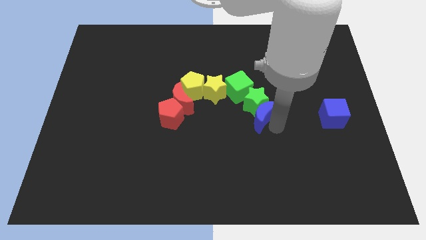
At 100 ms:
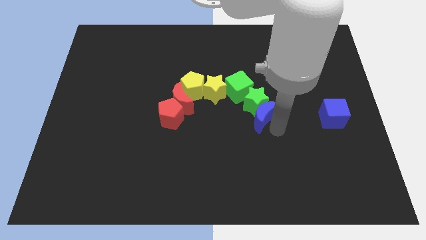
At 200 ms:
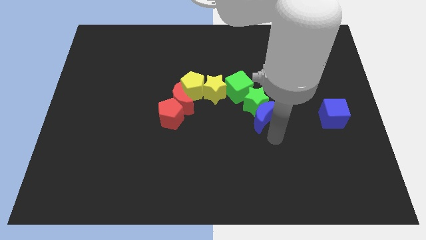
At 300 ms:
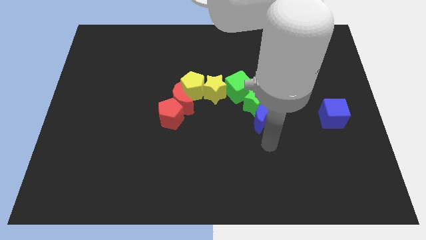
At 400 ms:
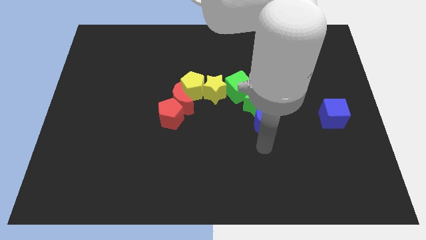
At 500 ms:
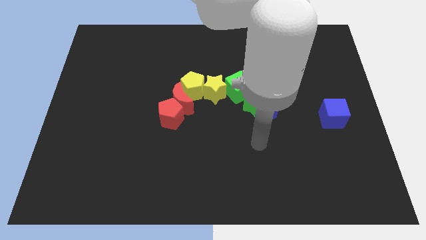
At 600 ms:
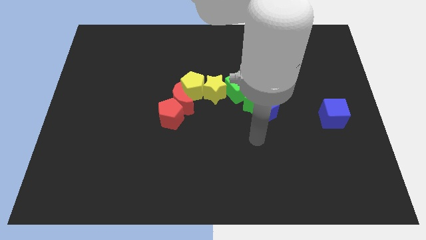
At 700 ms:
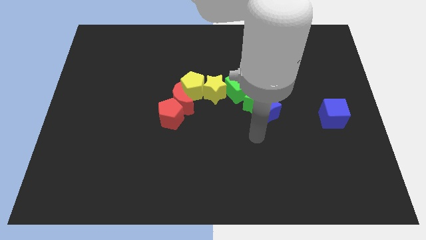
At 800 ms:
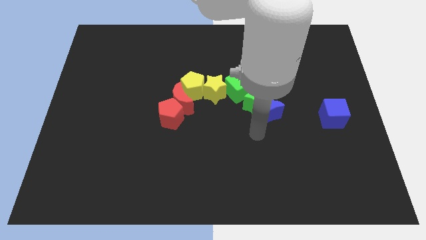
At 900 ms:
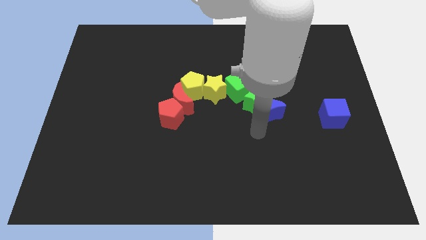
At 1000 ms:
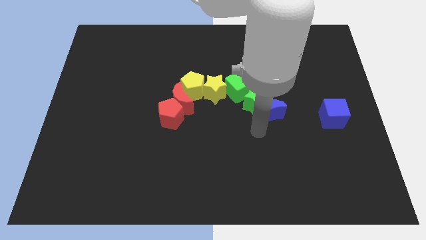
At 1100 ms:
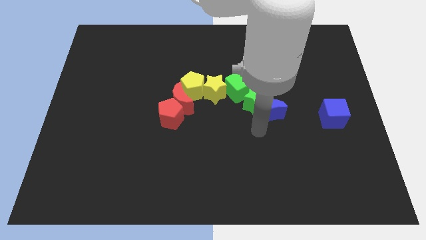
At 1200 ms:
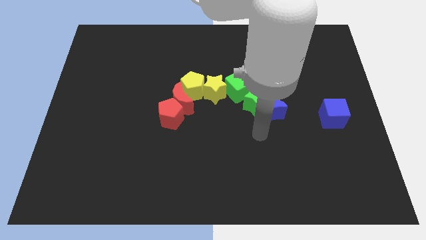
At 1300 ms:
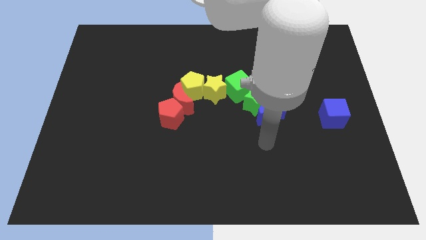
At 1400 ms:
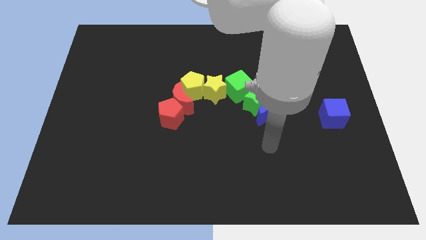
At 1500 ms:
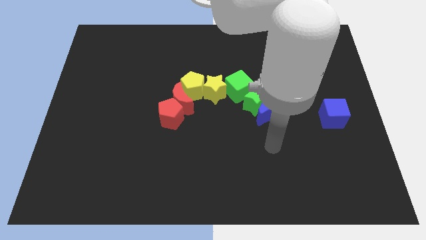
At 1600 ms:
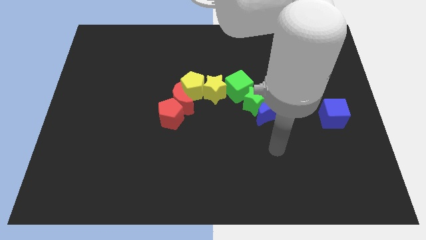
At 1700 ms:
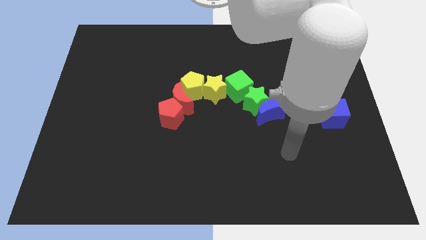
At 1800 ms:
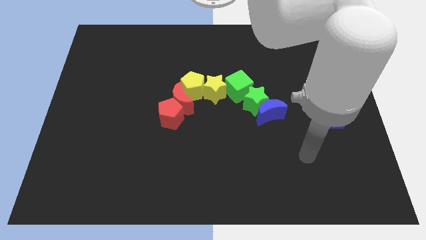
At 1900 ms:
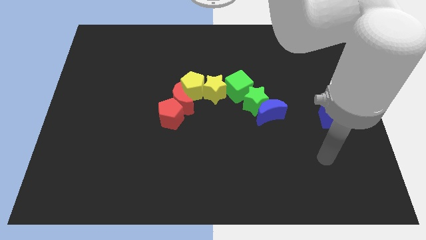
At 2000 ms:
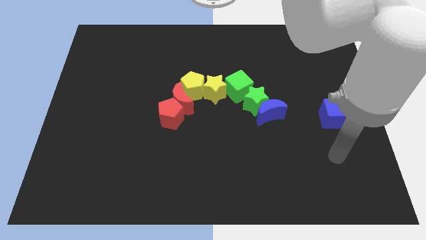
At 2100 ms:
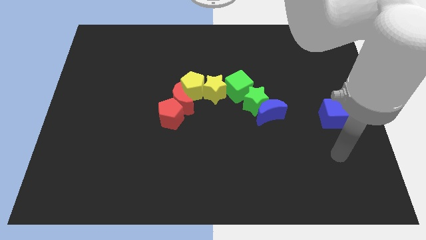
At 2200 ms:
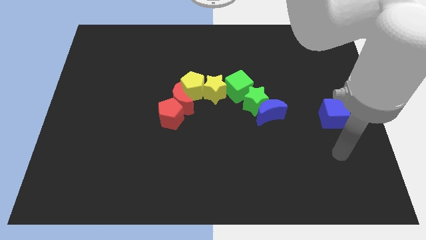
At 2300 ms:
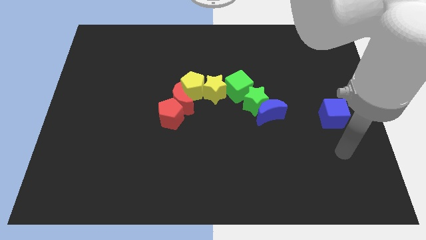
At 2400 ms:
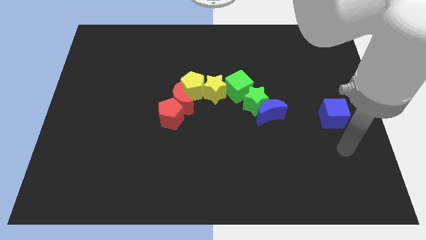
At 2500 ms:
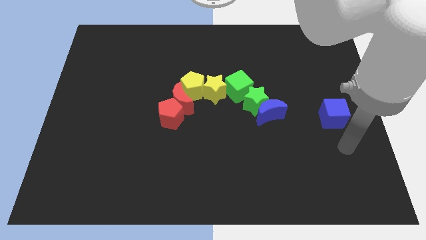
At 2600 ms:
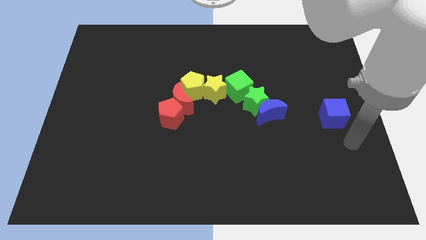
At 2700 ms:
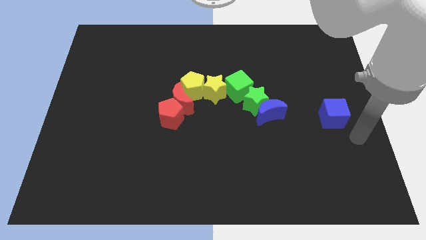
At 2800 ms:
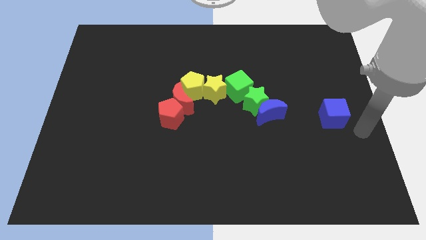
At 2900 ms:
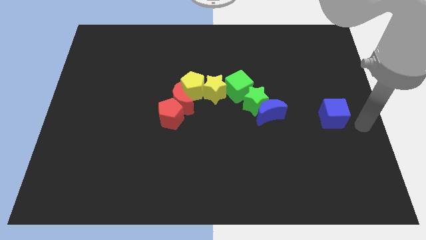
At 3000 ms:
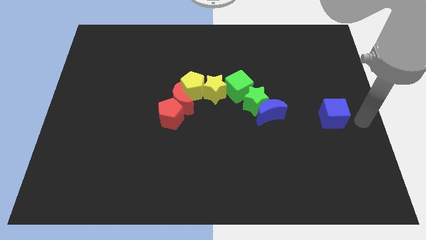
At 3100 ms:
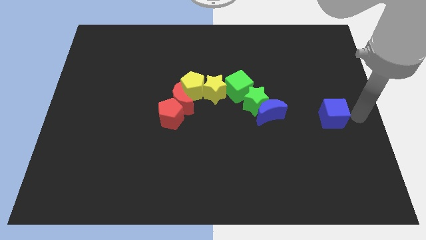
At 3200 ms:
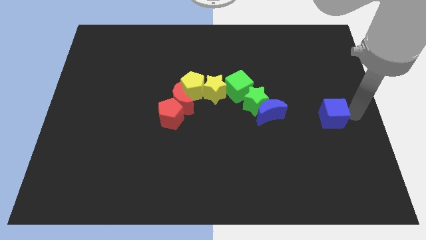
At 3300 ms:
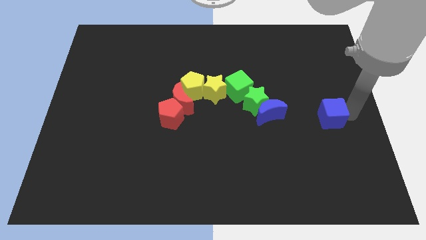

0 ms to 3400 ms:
move your arm towards the left of blue cube

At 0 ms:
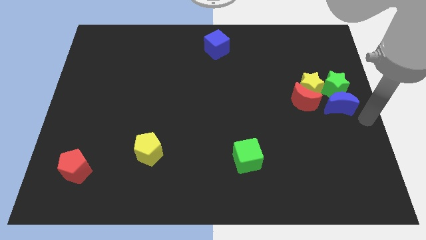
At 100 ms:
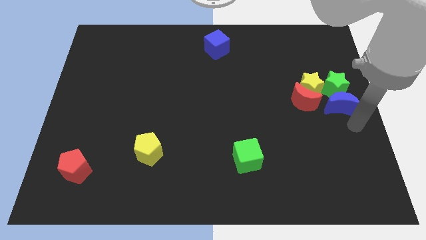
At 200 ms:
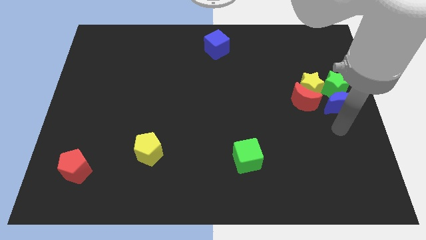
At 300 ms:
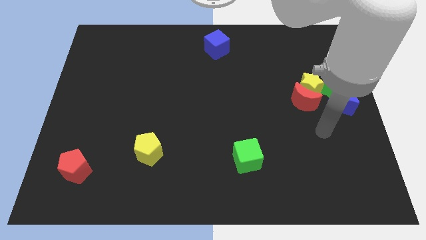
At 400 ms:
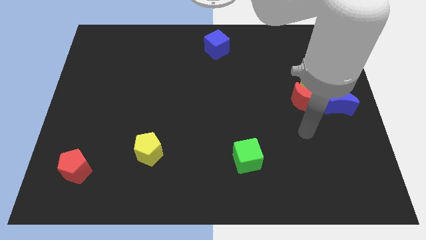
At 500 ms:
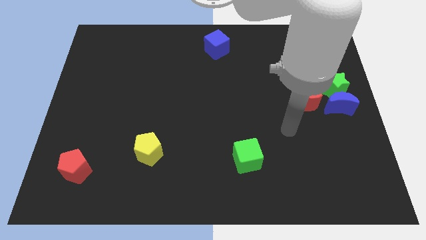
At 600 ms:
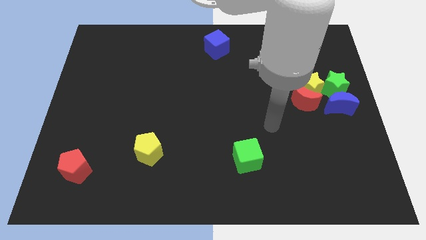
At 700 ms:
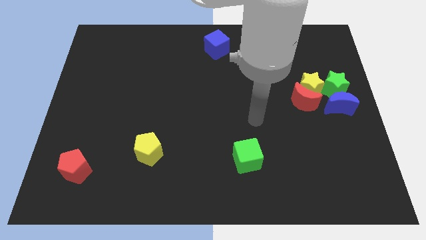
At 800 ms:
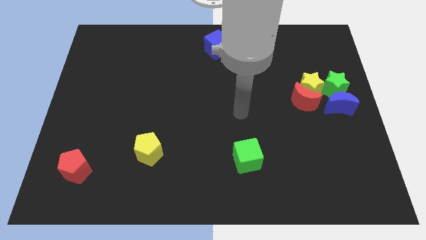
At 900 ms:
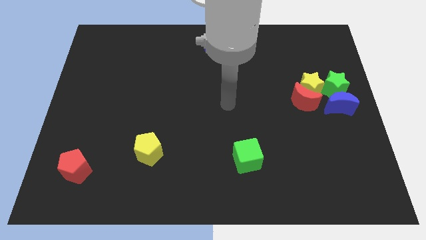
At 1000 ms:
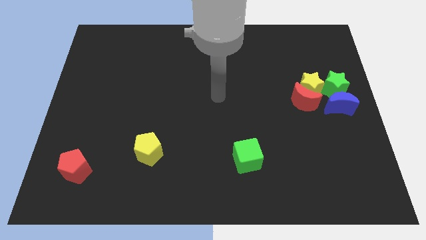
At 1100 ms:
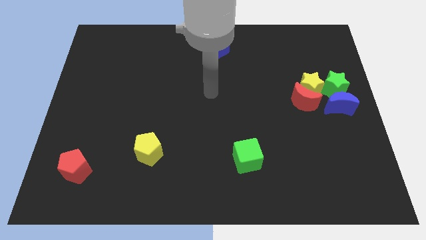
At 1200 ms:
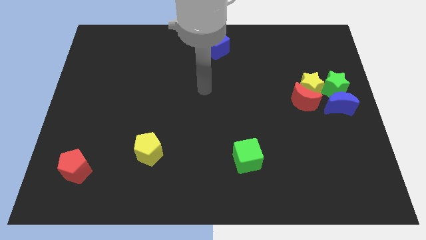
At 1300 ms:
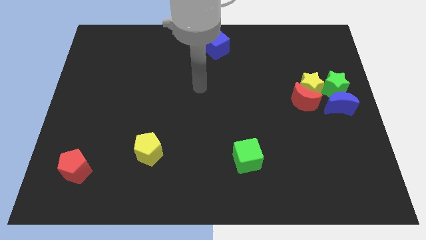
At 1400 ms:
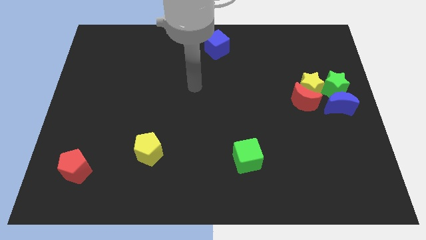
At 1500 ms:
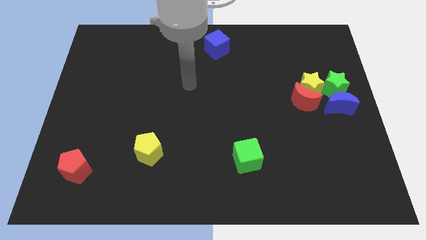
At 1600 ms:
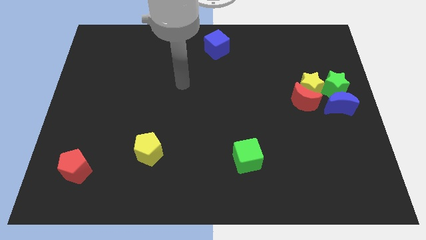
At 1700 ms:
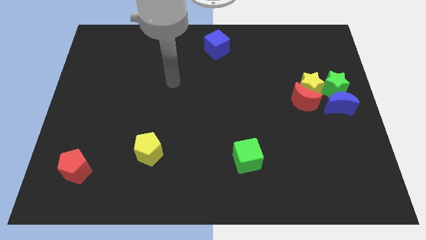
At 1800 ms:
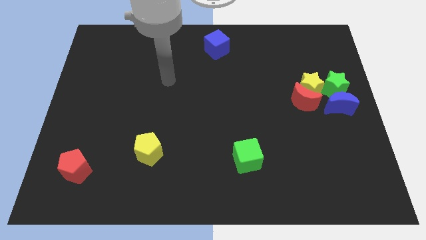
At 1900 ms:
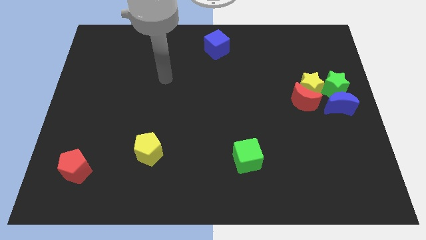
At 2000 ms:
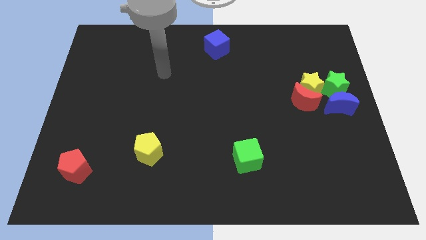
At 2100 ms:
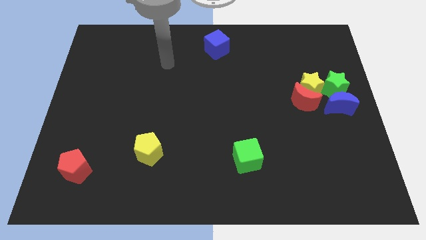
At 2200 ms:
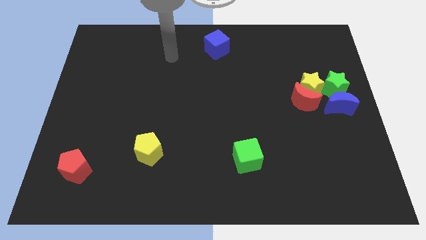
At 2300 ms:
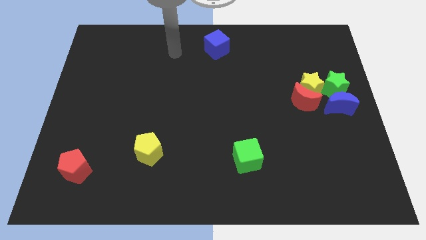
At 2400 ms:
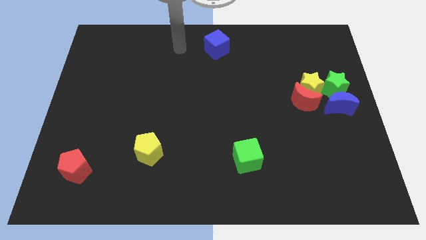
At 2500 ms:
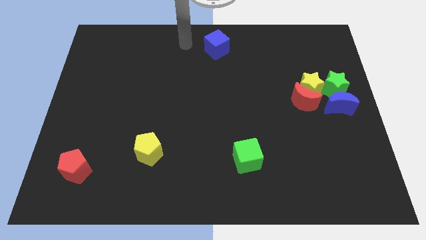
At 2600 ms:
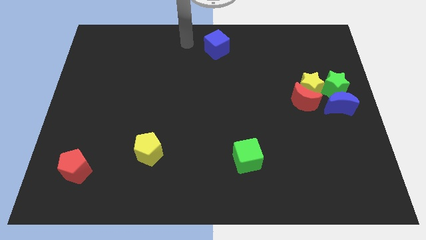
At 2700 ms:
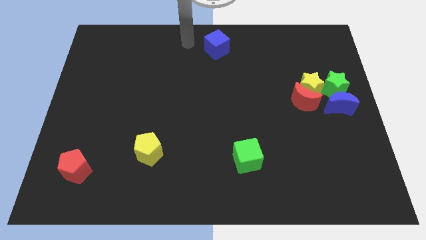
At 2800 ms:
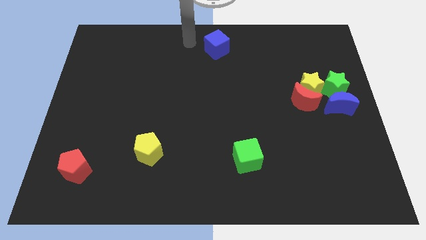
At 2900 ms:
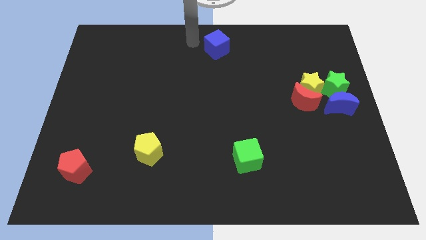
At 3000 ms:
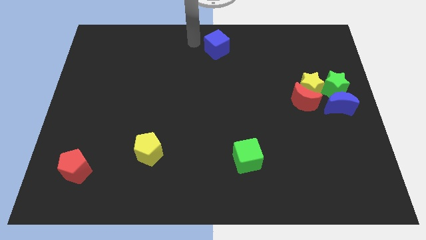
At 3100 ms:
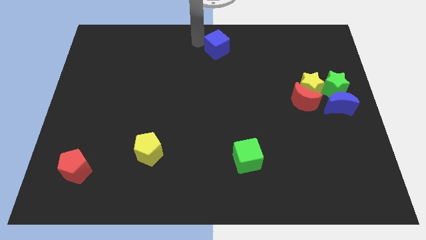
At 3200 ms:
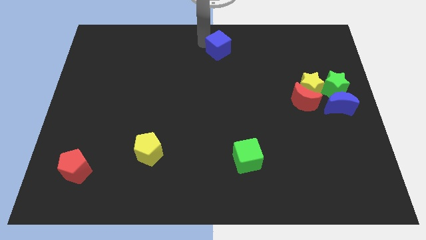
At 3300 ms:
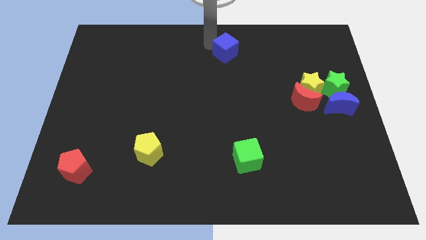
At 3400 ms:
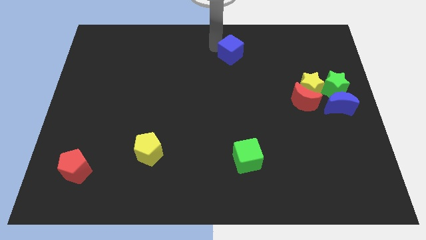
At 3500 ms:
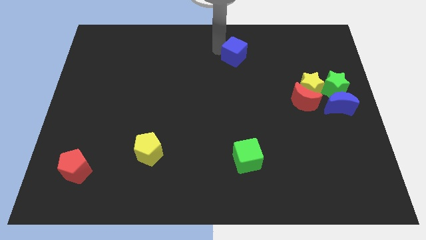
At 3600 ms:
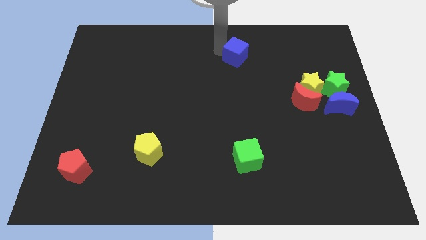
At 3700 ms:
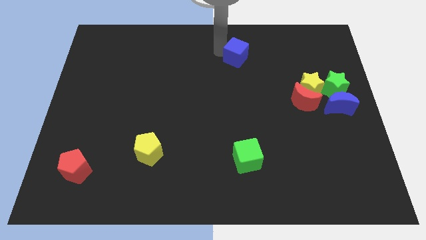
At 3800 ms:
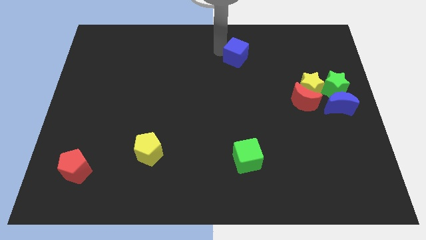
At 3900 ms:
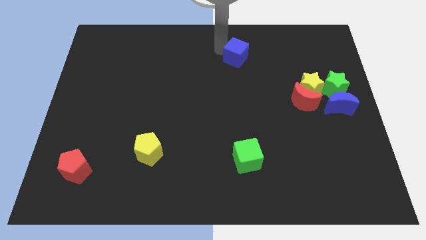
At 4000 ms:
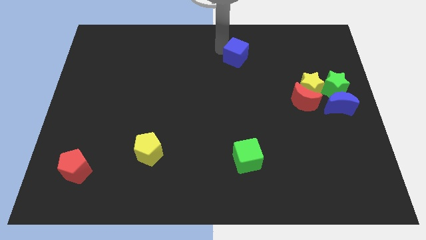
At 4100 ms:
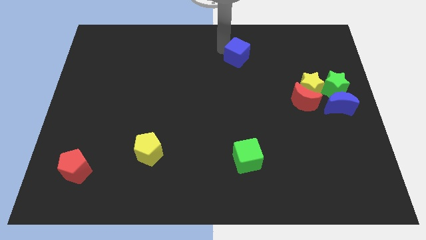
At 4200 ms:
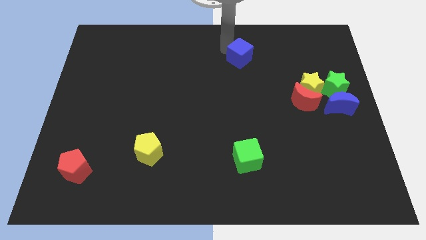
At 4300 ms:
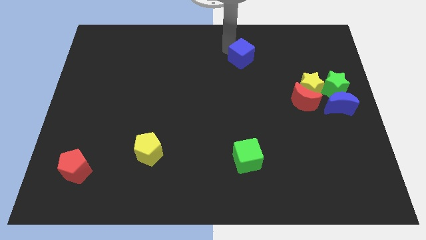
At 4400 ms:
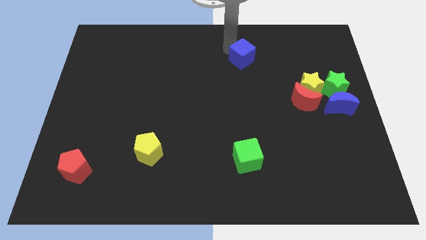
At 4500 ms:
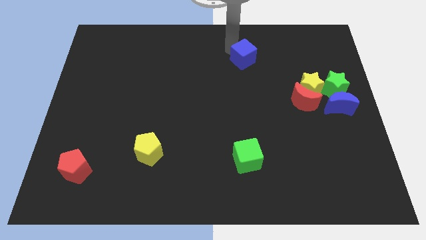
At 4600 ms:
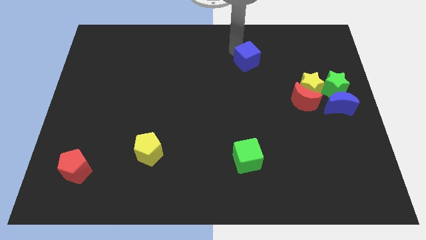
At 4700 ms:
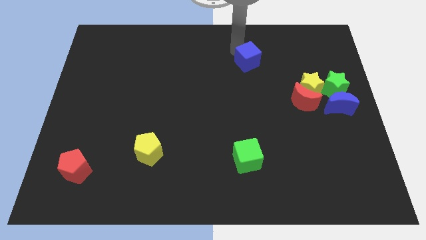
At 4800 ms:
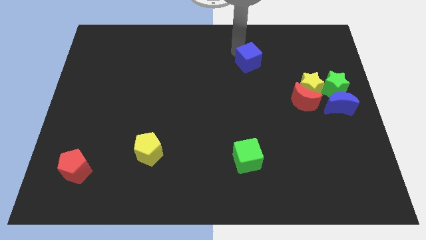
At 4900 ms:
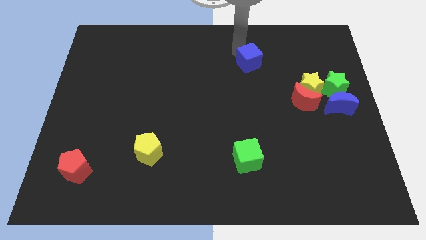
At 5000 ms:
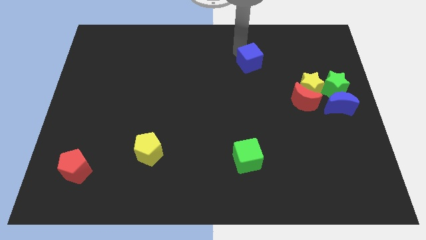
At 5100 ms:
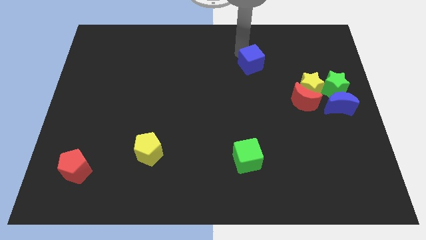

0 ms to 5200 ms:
move the blue cube towards the group of blocks

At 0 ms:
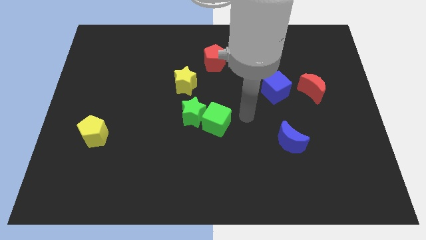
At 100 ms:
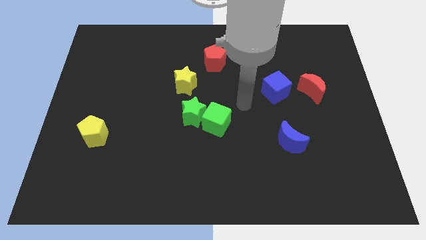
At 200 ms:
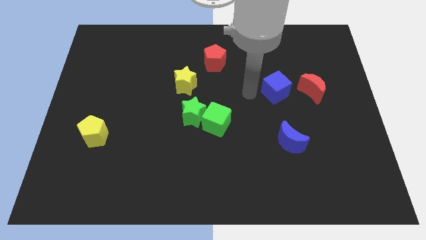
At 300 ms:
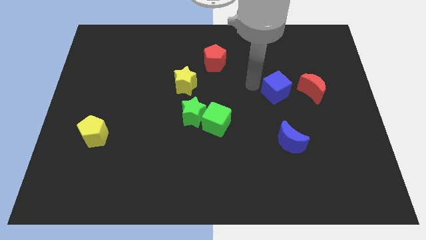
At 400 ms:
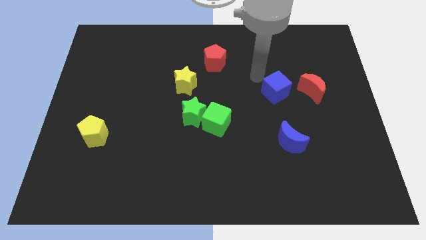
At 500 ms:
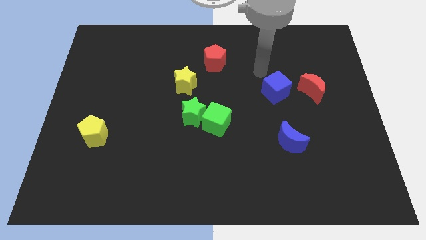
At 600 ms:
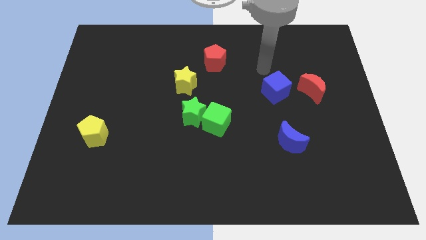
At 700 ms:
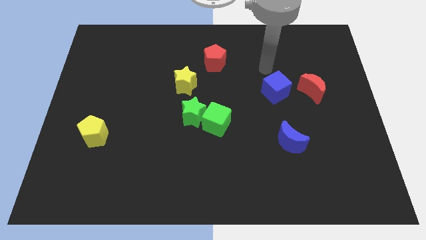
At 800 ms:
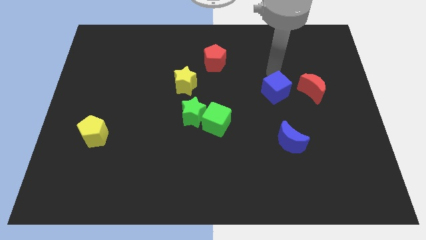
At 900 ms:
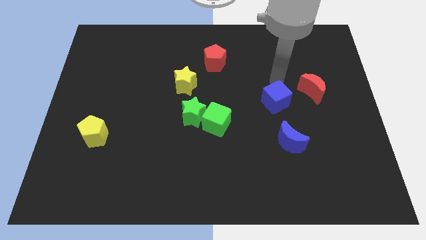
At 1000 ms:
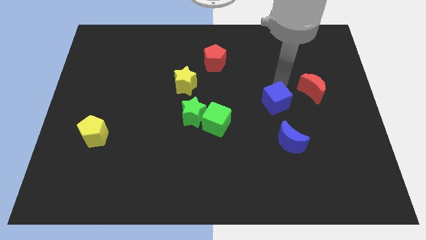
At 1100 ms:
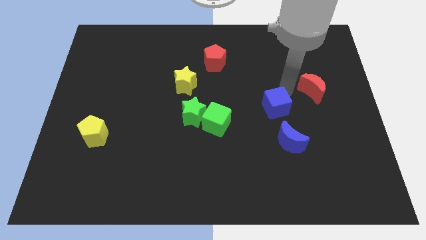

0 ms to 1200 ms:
push the blue cube slightly to the bottom of the board
